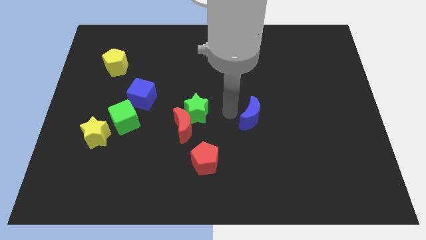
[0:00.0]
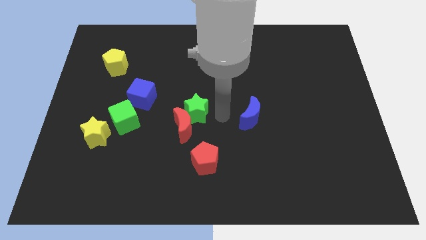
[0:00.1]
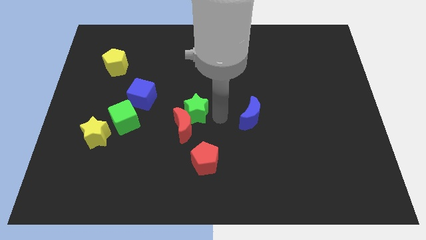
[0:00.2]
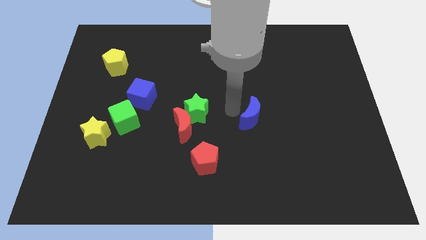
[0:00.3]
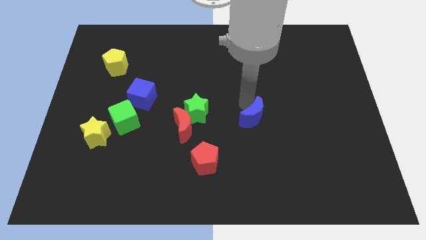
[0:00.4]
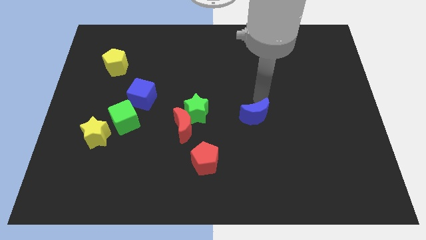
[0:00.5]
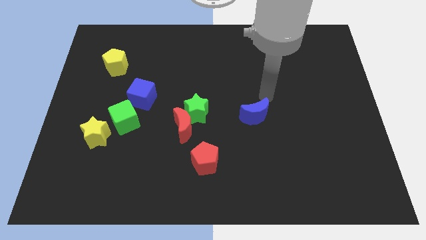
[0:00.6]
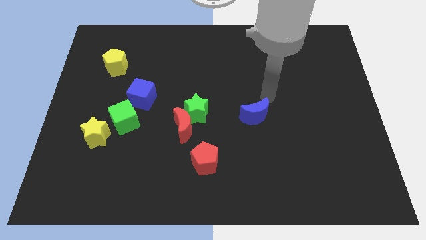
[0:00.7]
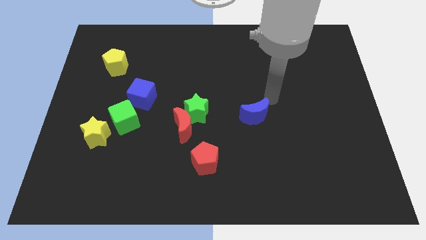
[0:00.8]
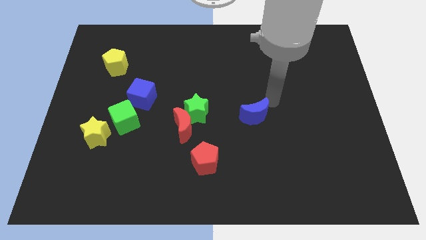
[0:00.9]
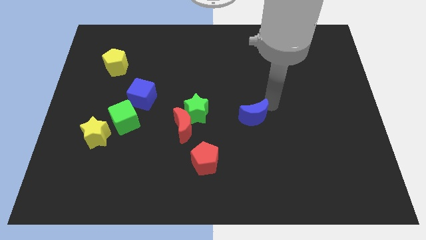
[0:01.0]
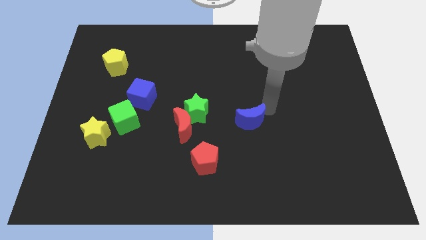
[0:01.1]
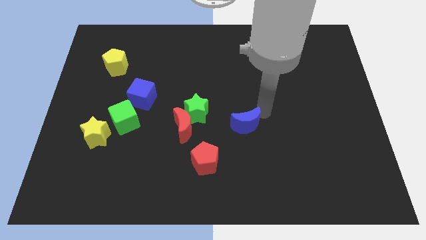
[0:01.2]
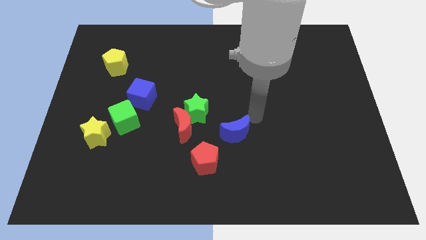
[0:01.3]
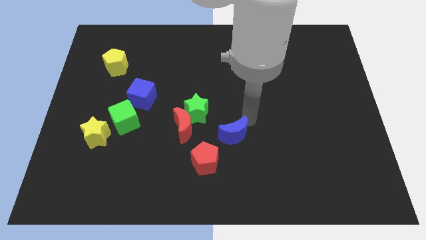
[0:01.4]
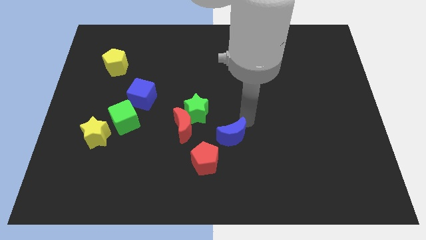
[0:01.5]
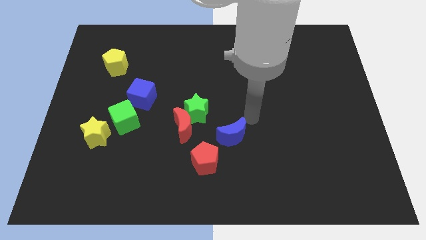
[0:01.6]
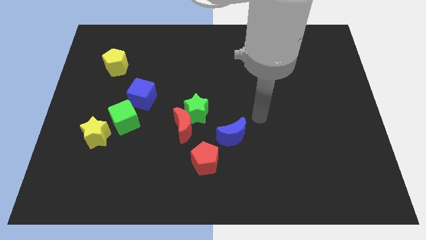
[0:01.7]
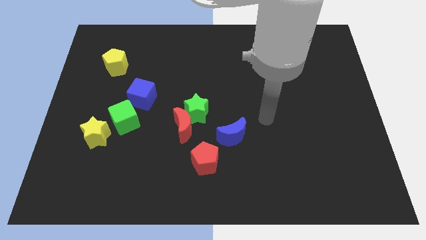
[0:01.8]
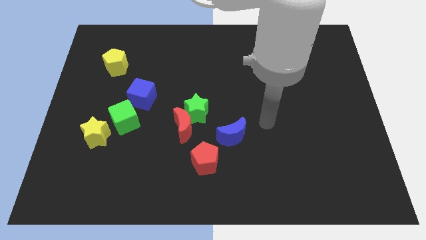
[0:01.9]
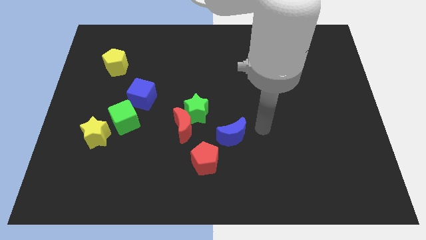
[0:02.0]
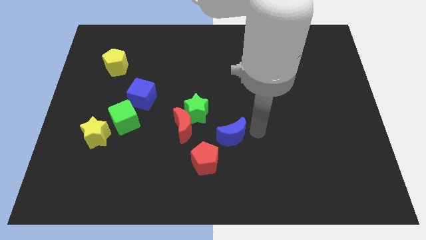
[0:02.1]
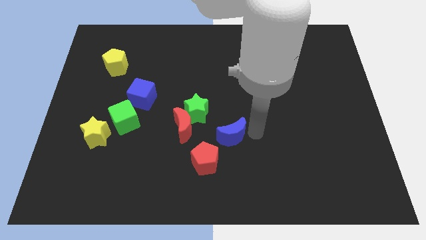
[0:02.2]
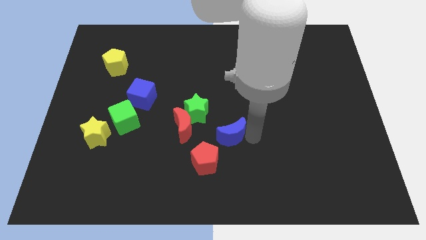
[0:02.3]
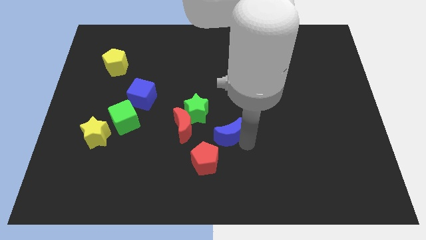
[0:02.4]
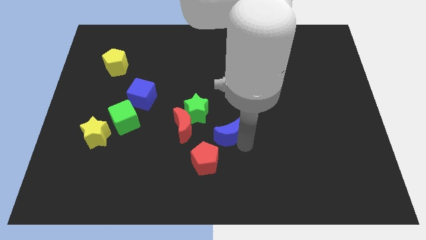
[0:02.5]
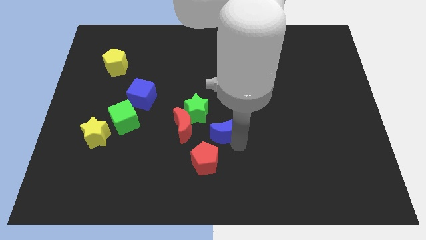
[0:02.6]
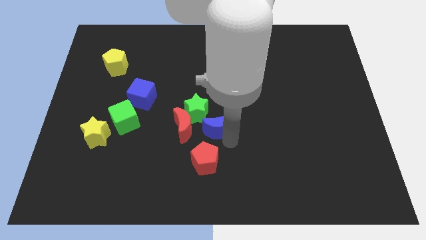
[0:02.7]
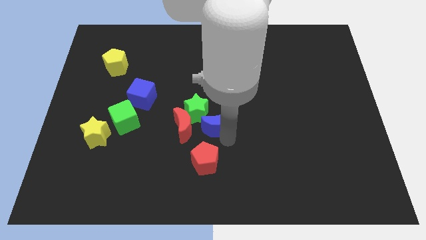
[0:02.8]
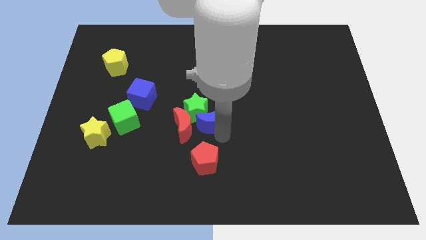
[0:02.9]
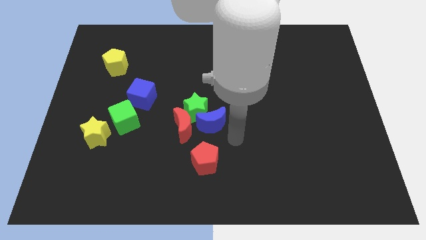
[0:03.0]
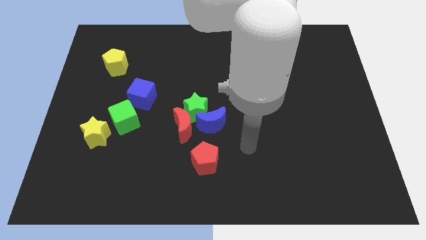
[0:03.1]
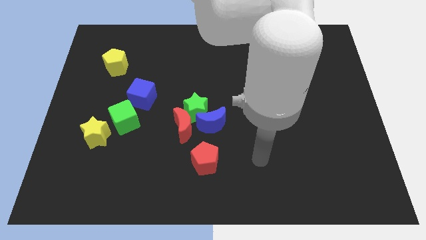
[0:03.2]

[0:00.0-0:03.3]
push the blue moon into the green star

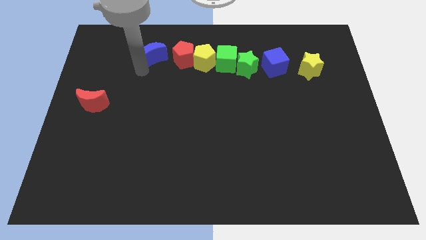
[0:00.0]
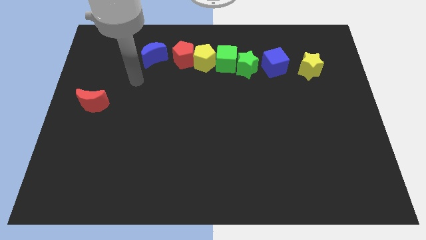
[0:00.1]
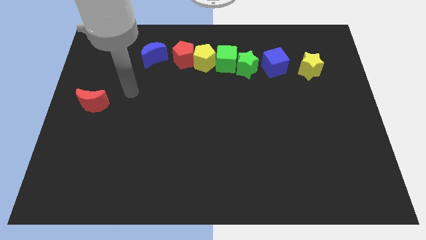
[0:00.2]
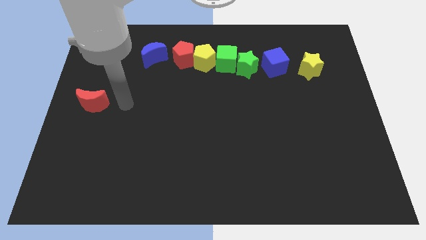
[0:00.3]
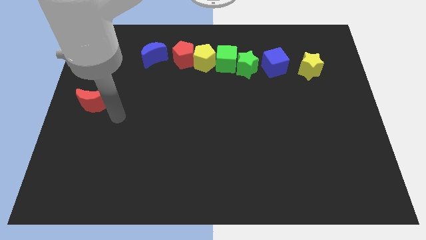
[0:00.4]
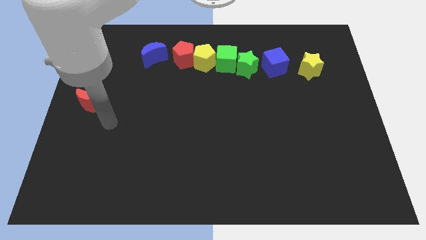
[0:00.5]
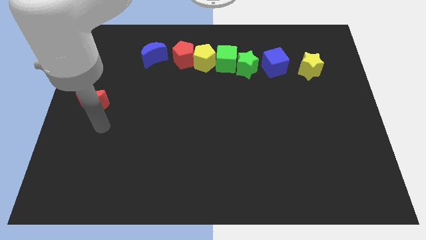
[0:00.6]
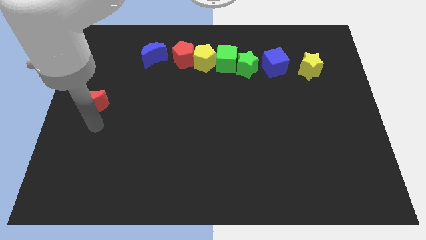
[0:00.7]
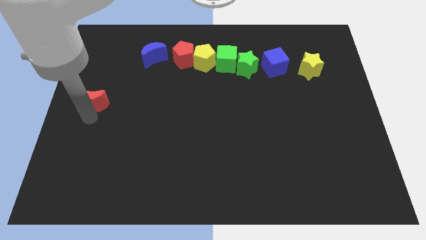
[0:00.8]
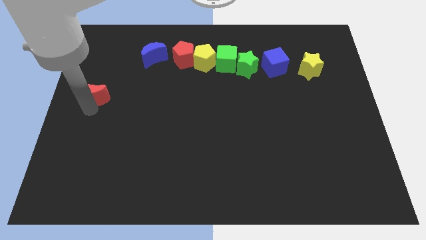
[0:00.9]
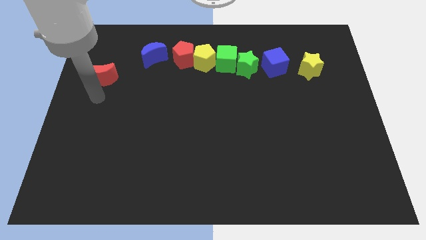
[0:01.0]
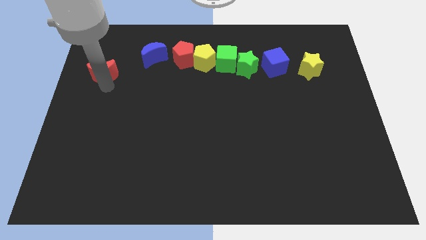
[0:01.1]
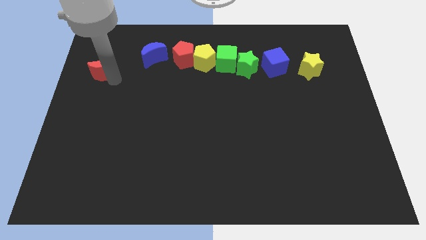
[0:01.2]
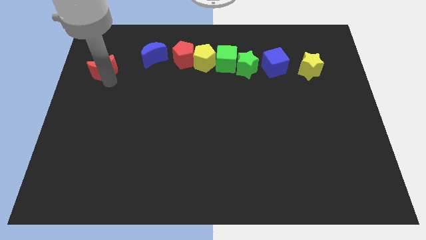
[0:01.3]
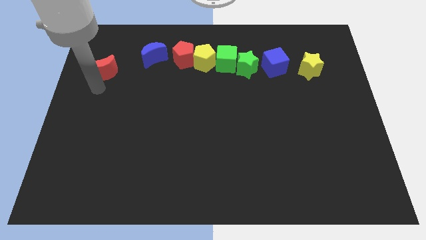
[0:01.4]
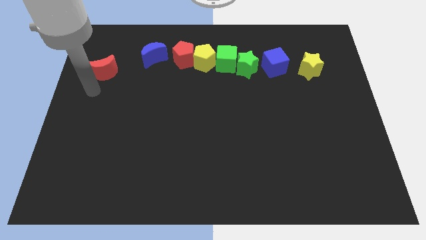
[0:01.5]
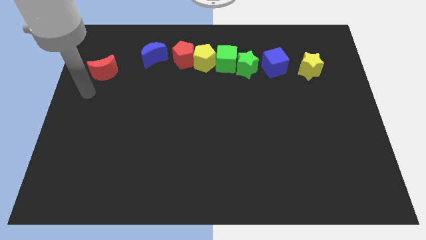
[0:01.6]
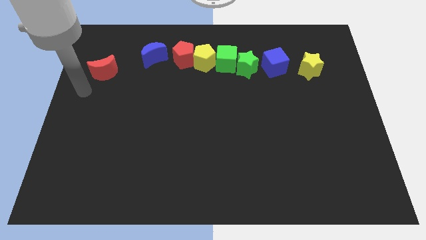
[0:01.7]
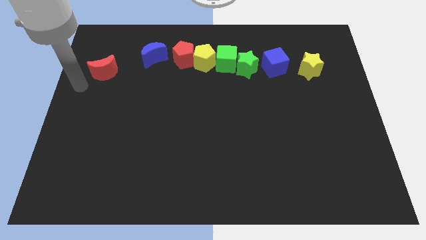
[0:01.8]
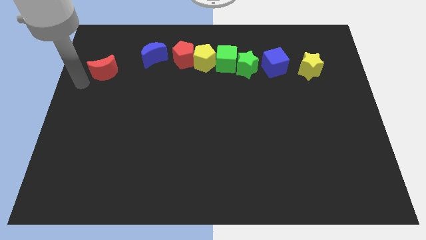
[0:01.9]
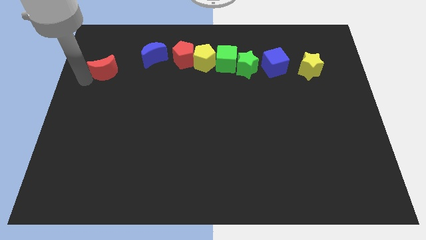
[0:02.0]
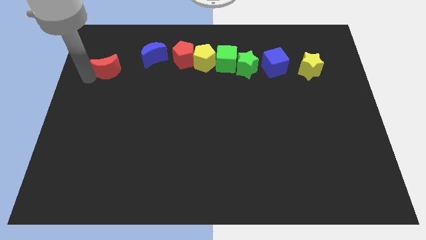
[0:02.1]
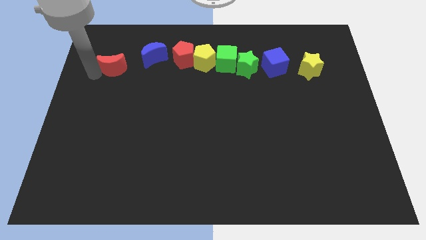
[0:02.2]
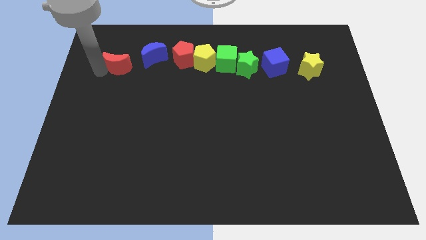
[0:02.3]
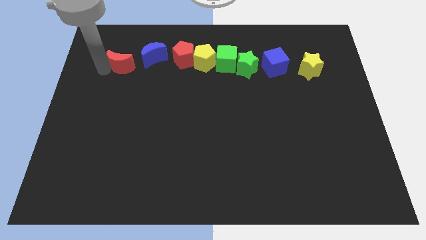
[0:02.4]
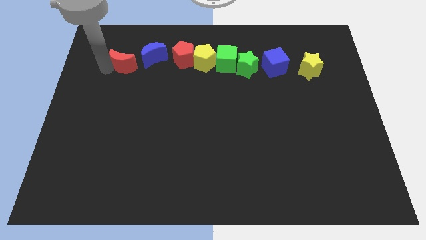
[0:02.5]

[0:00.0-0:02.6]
move red crescent left of blue crescent

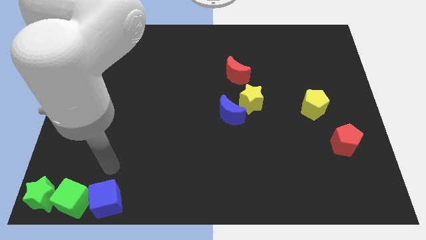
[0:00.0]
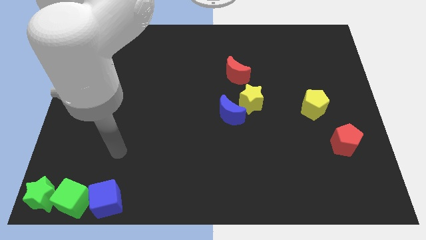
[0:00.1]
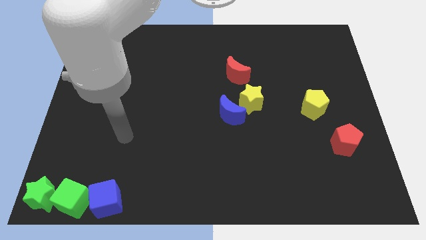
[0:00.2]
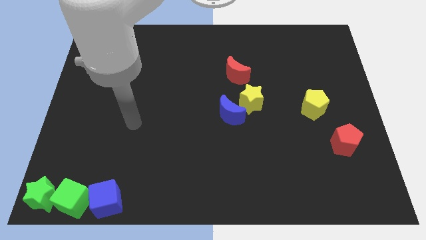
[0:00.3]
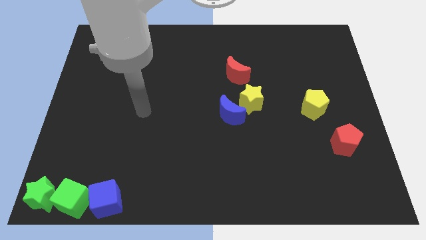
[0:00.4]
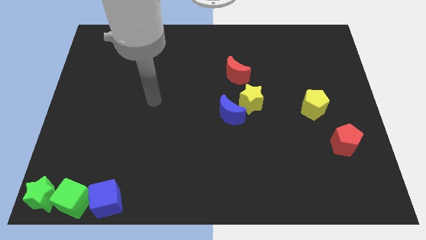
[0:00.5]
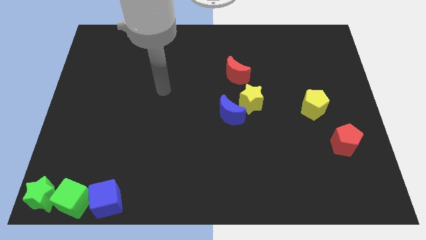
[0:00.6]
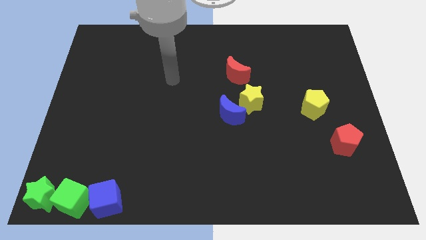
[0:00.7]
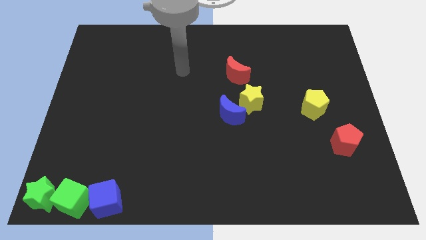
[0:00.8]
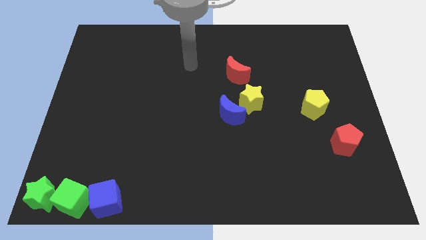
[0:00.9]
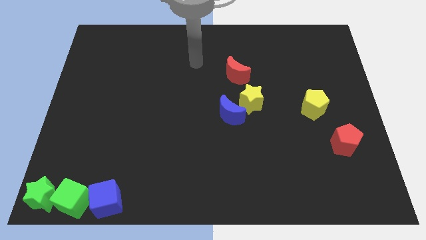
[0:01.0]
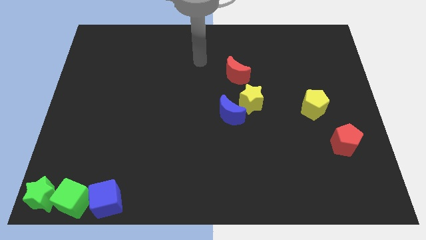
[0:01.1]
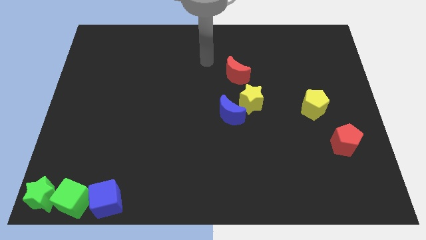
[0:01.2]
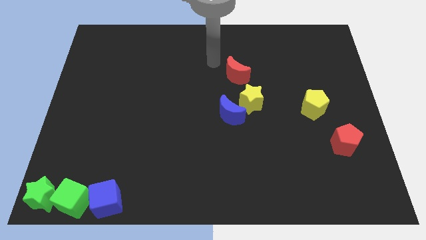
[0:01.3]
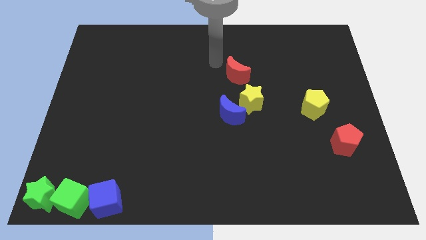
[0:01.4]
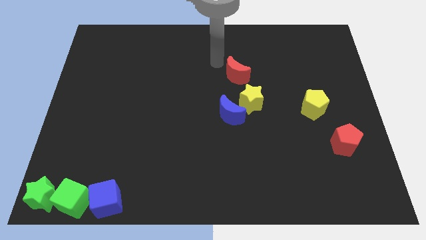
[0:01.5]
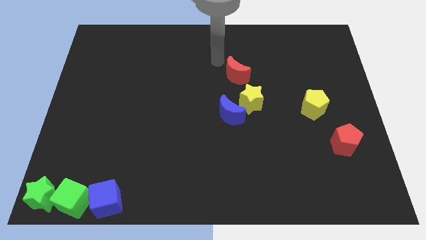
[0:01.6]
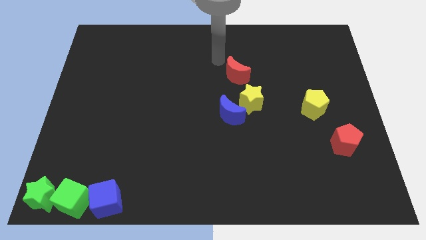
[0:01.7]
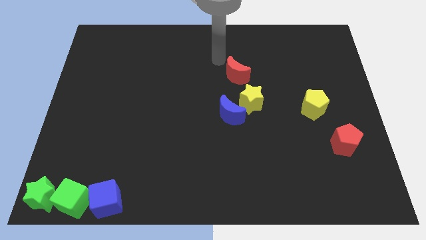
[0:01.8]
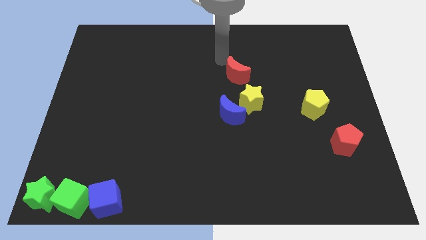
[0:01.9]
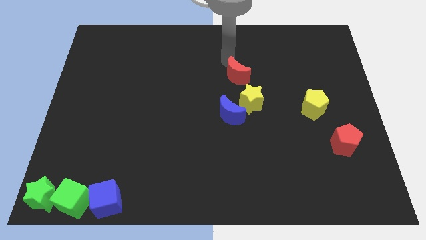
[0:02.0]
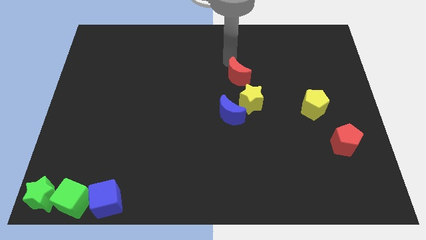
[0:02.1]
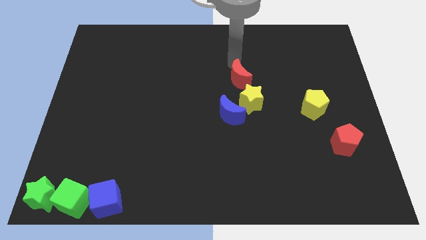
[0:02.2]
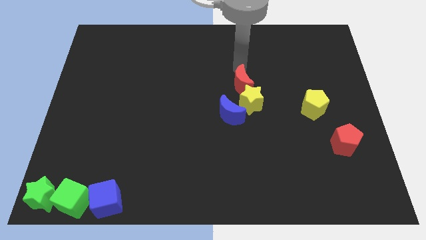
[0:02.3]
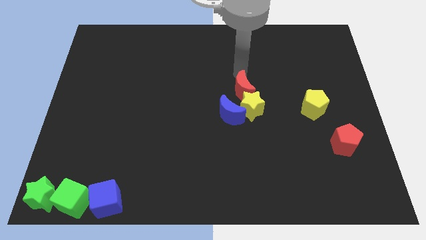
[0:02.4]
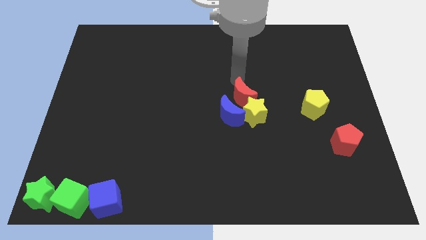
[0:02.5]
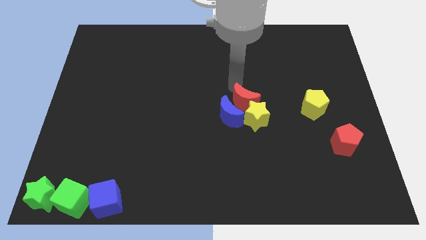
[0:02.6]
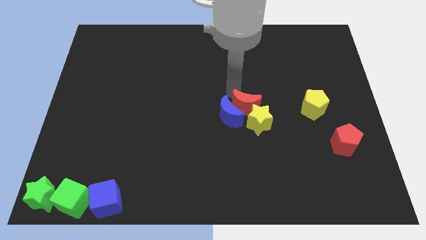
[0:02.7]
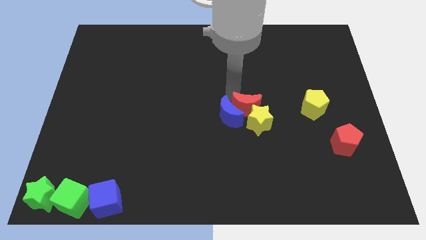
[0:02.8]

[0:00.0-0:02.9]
push the red crescent into the yellow star

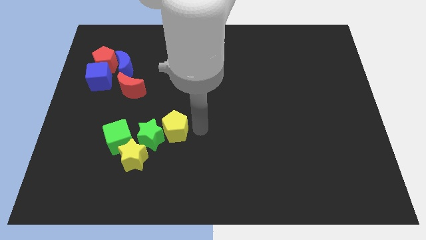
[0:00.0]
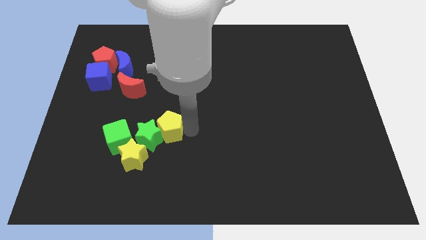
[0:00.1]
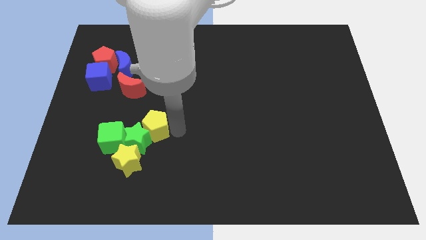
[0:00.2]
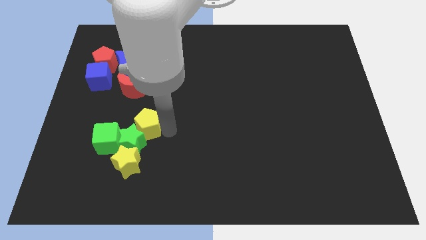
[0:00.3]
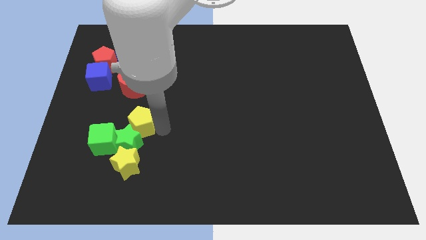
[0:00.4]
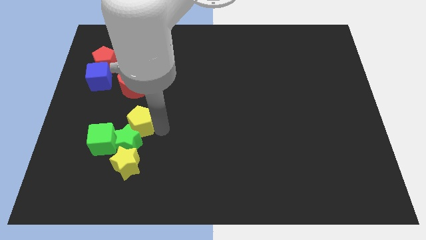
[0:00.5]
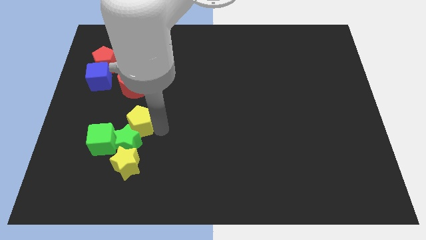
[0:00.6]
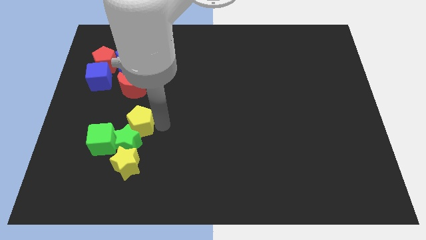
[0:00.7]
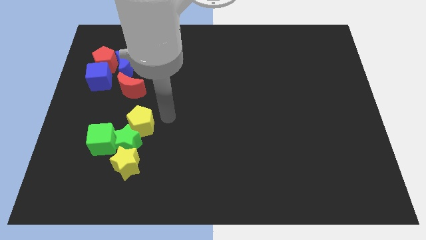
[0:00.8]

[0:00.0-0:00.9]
place yellow pentagon below red crescent
